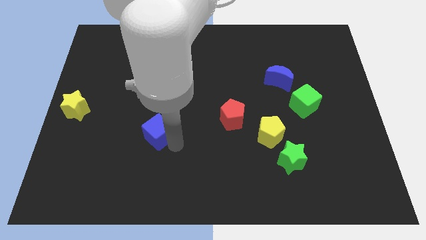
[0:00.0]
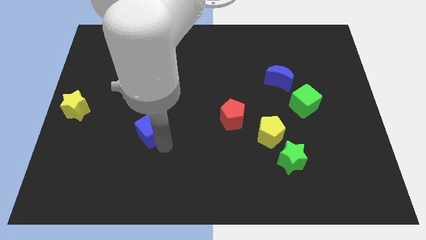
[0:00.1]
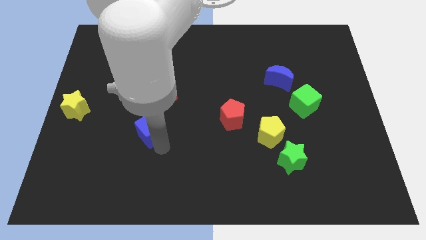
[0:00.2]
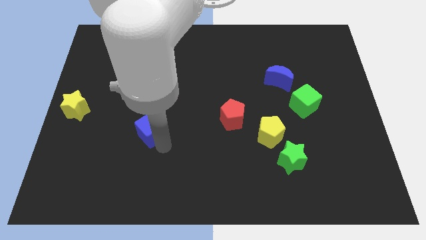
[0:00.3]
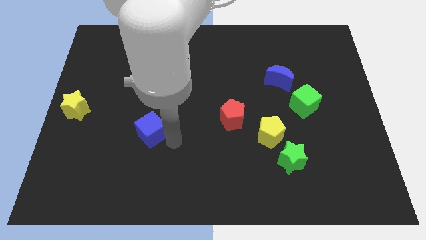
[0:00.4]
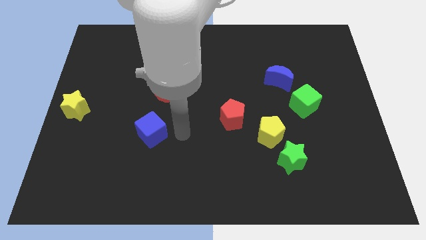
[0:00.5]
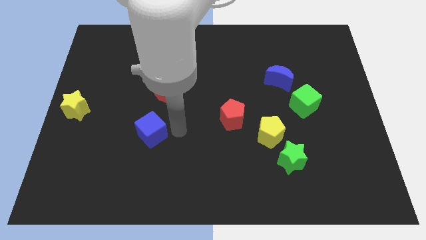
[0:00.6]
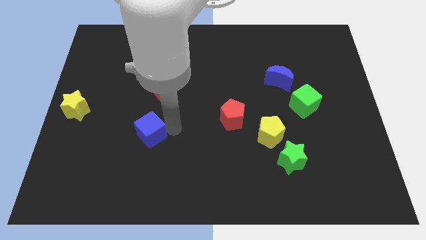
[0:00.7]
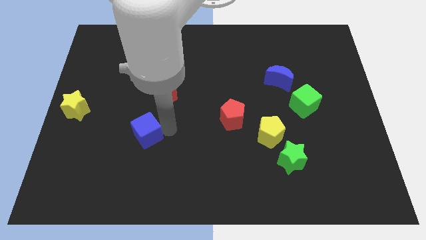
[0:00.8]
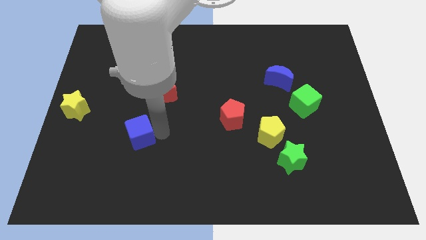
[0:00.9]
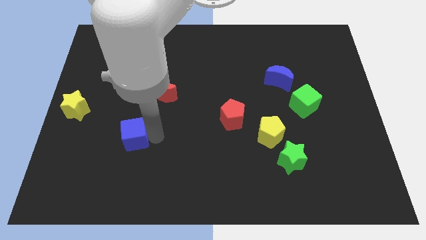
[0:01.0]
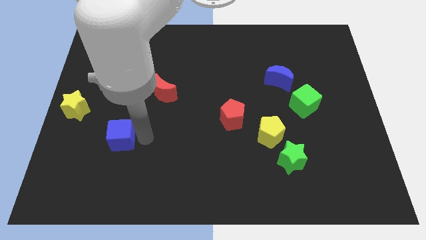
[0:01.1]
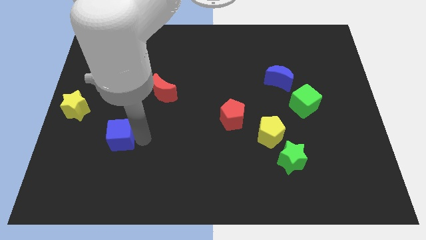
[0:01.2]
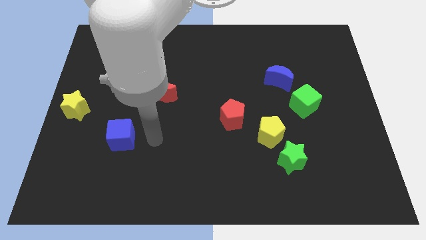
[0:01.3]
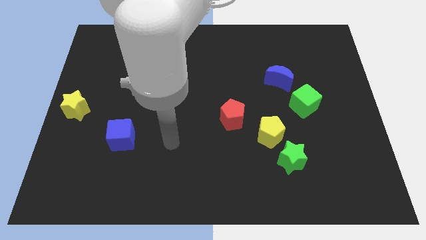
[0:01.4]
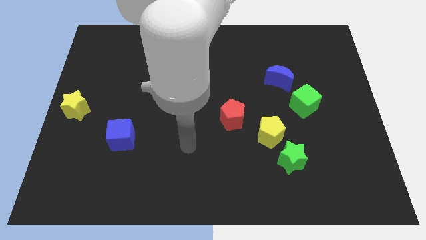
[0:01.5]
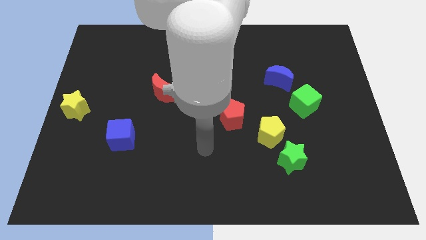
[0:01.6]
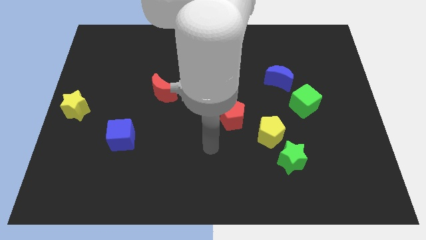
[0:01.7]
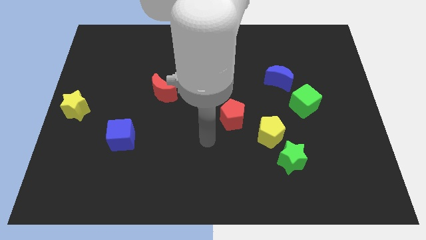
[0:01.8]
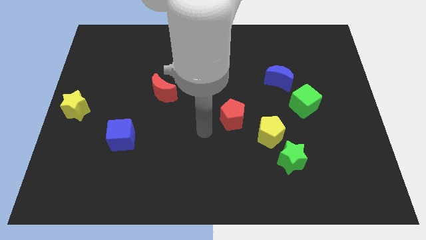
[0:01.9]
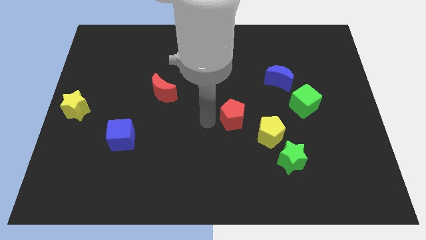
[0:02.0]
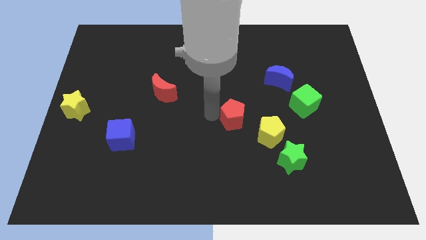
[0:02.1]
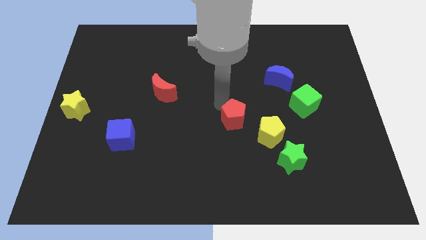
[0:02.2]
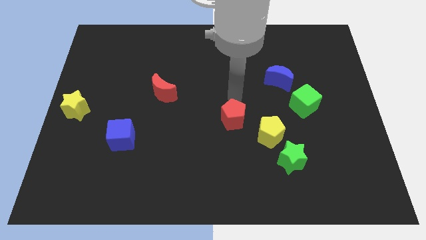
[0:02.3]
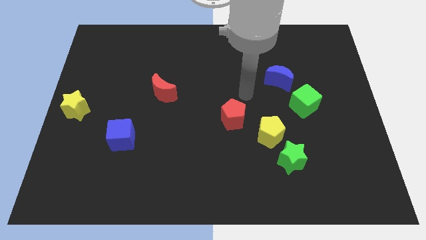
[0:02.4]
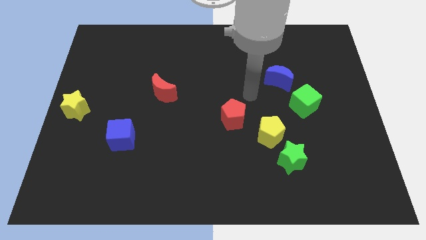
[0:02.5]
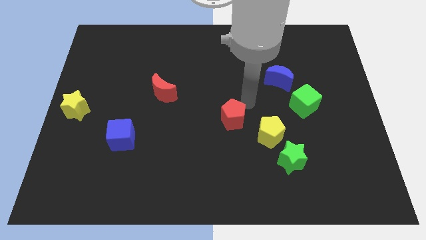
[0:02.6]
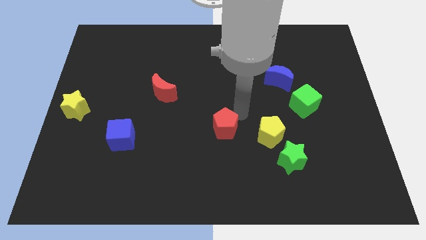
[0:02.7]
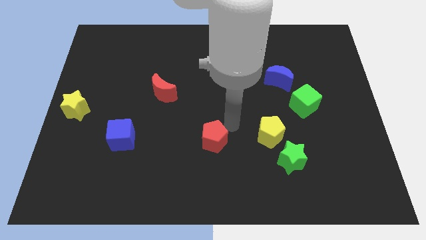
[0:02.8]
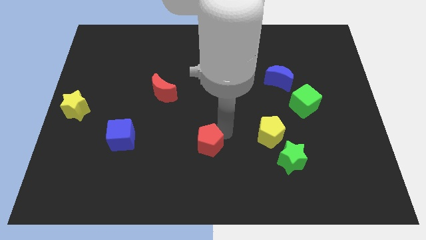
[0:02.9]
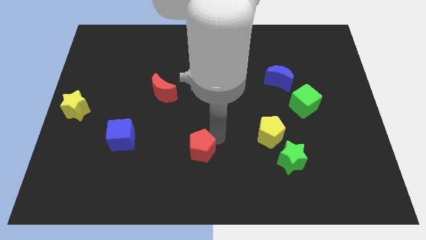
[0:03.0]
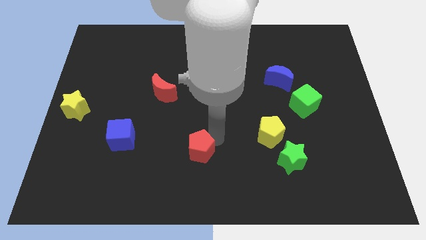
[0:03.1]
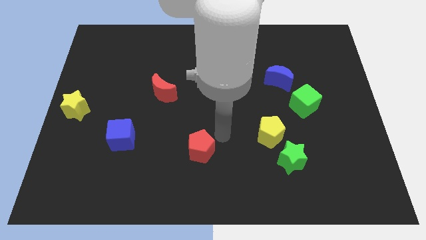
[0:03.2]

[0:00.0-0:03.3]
push red pentagon slightly towards down

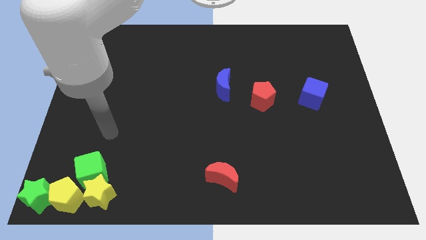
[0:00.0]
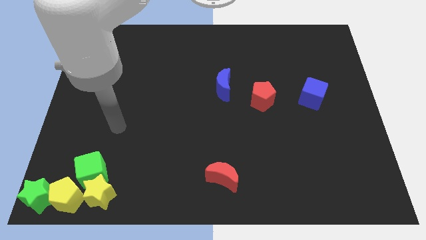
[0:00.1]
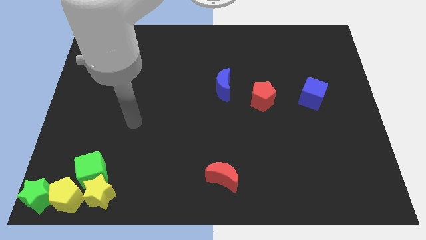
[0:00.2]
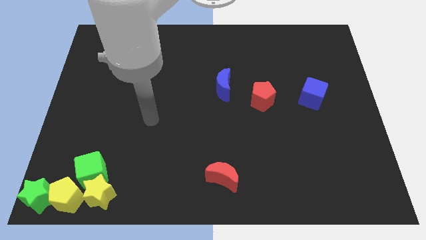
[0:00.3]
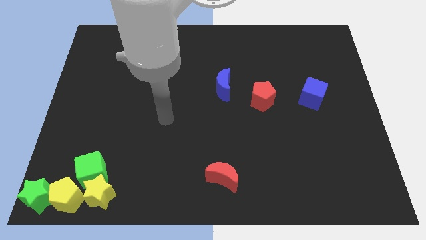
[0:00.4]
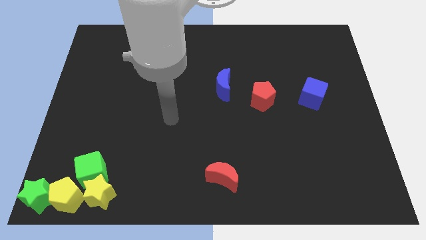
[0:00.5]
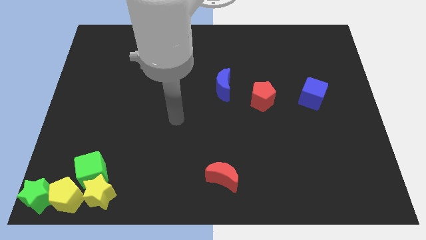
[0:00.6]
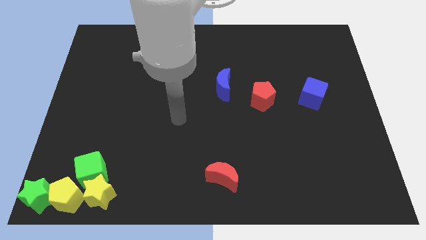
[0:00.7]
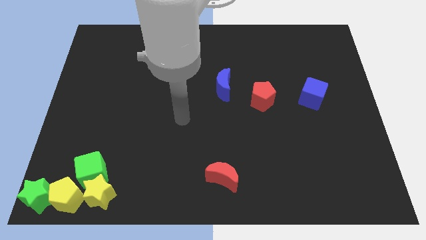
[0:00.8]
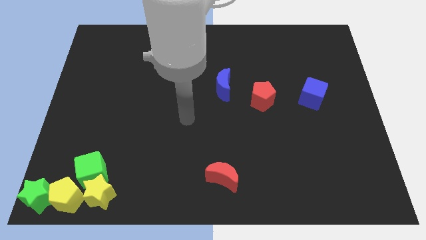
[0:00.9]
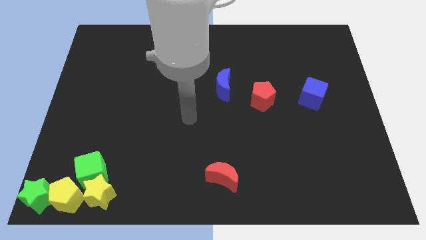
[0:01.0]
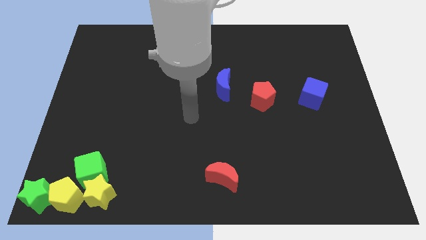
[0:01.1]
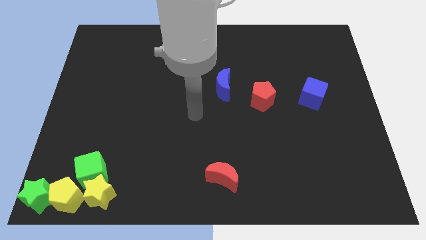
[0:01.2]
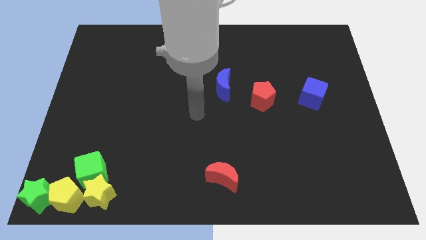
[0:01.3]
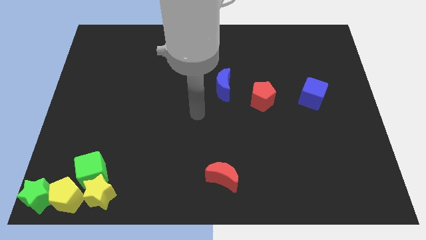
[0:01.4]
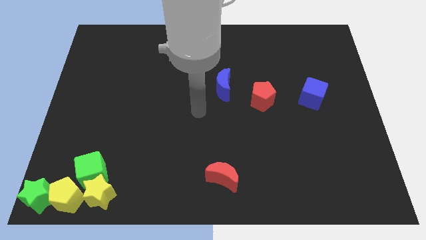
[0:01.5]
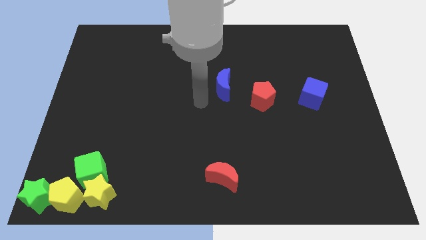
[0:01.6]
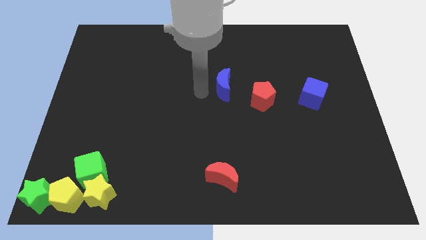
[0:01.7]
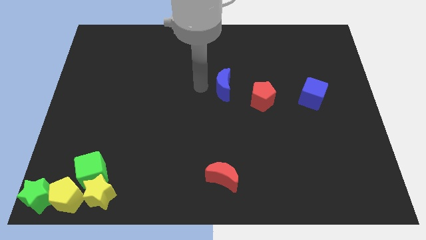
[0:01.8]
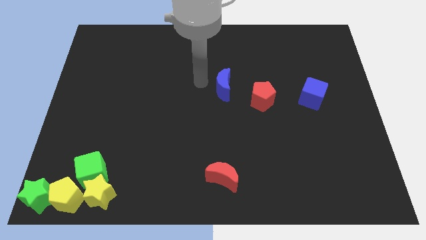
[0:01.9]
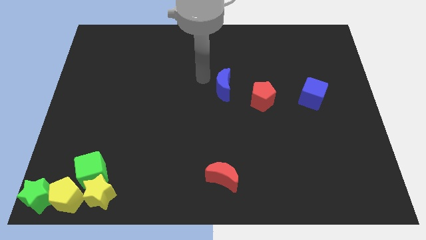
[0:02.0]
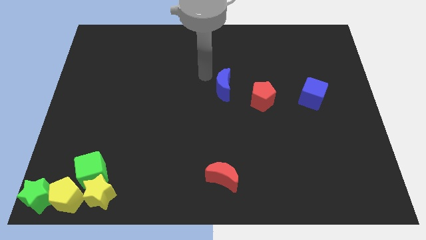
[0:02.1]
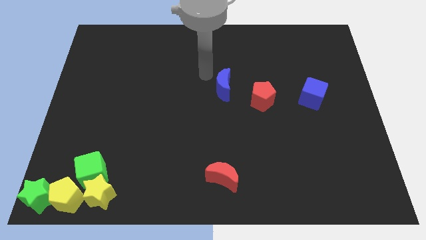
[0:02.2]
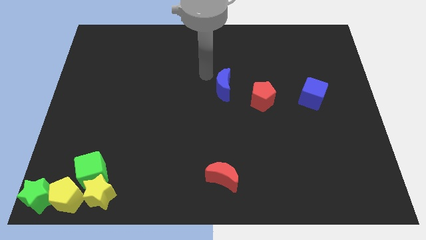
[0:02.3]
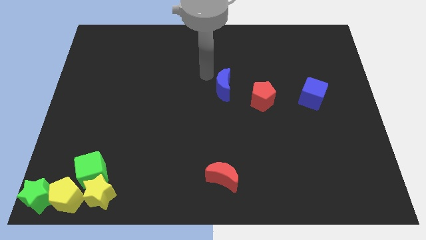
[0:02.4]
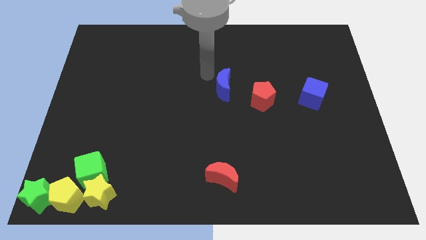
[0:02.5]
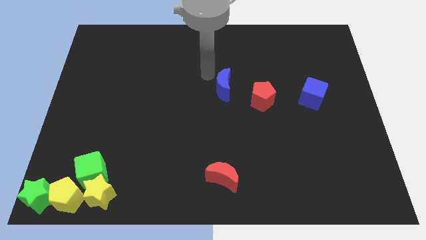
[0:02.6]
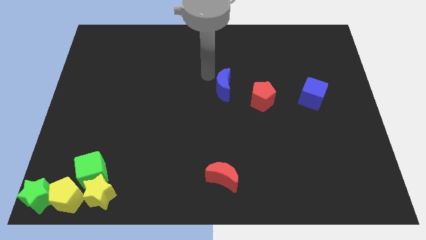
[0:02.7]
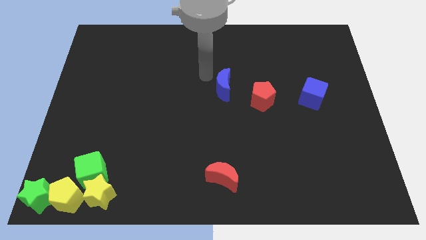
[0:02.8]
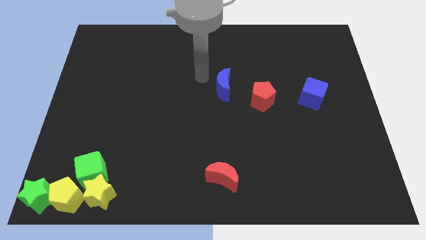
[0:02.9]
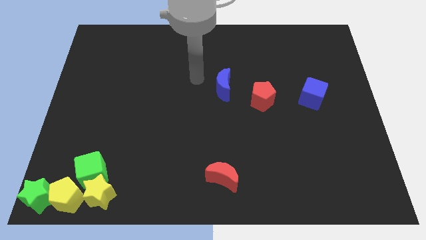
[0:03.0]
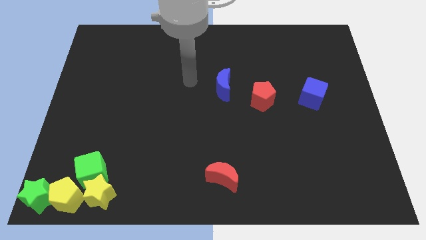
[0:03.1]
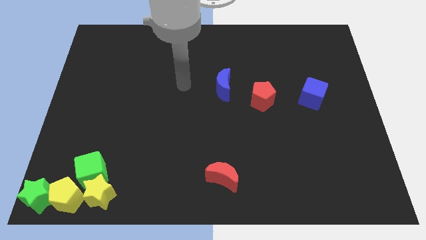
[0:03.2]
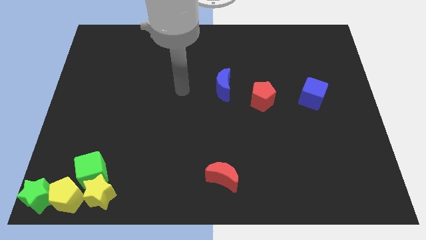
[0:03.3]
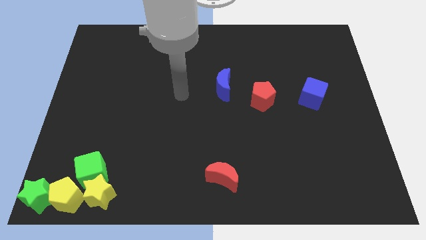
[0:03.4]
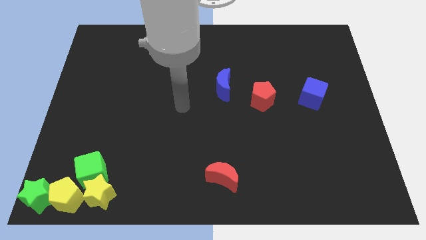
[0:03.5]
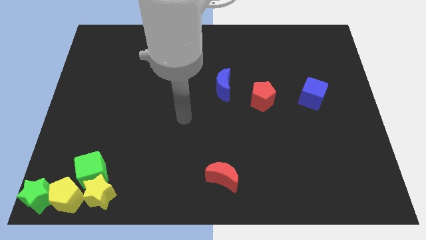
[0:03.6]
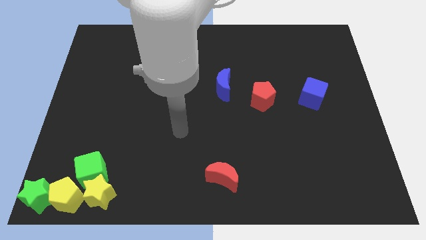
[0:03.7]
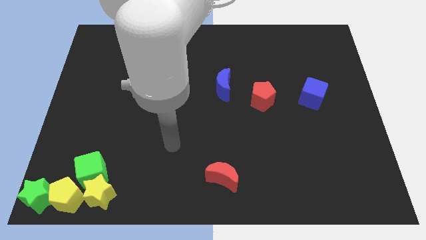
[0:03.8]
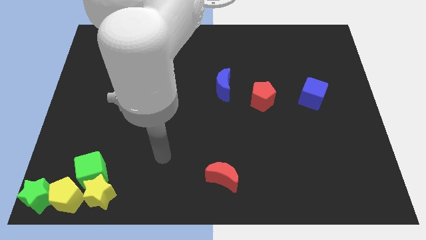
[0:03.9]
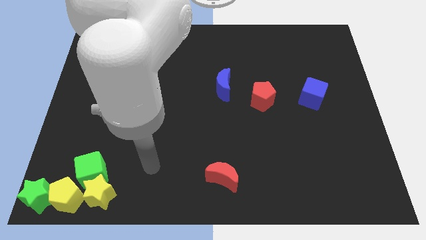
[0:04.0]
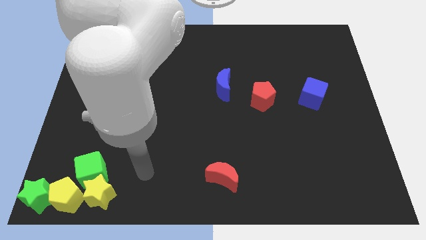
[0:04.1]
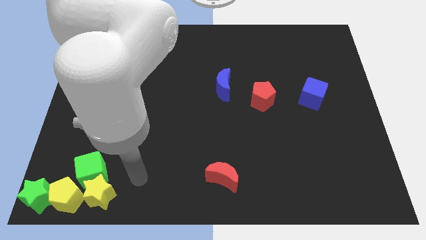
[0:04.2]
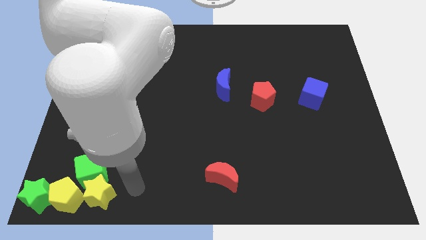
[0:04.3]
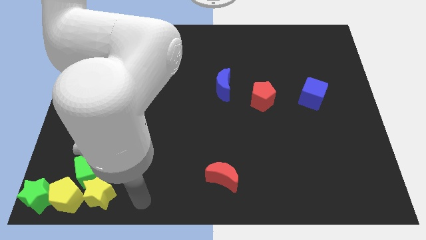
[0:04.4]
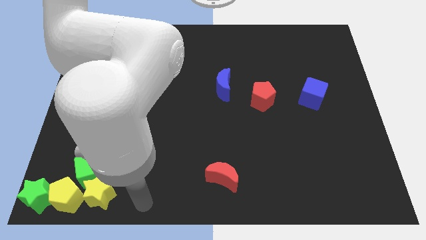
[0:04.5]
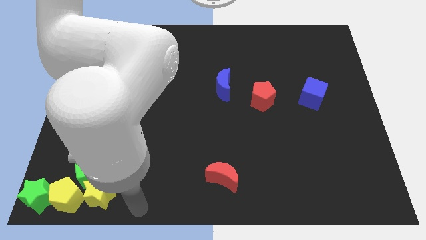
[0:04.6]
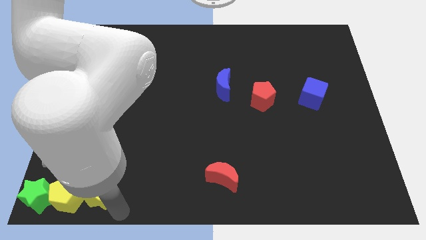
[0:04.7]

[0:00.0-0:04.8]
move your arm to the bottom of the yellow star

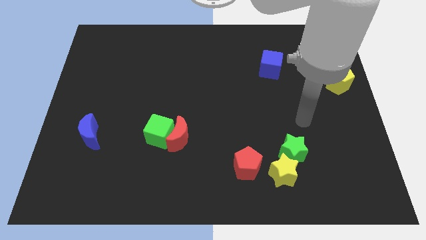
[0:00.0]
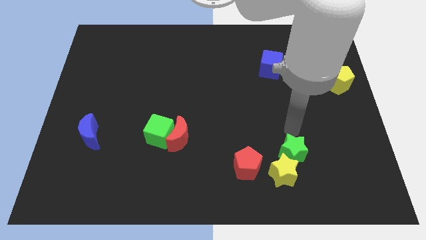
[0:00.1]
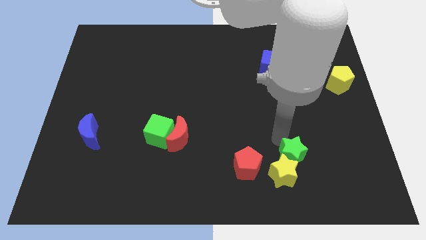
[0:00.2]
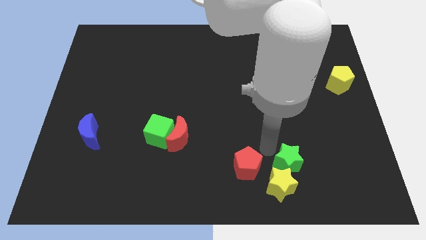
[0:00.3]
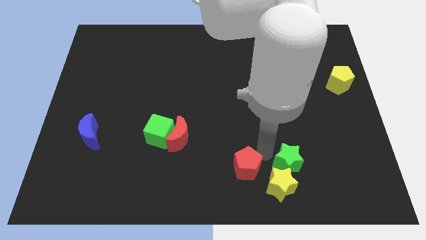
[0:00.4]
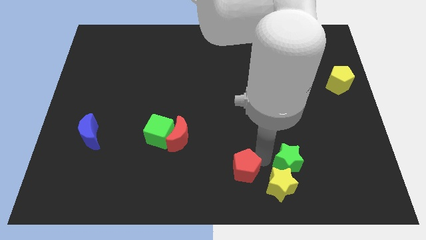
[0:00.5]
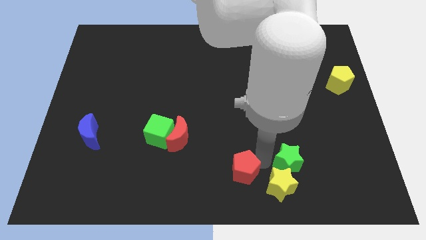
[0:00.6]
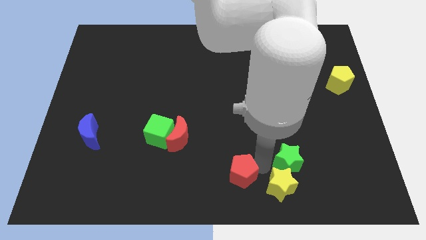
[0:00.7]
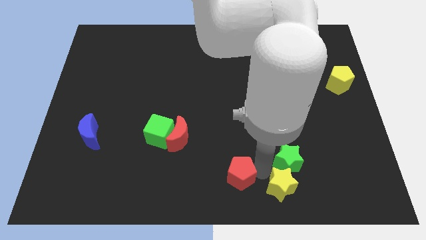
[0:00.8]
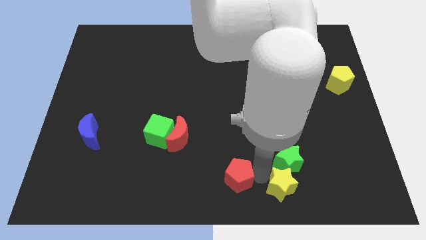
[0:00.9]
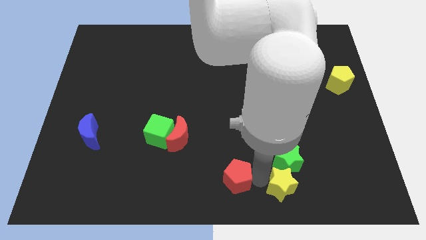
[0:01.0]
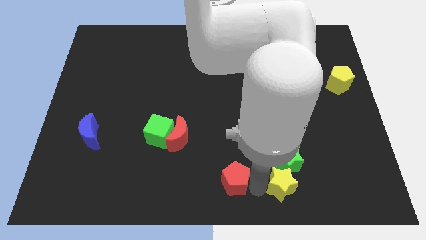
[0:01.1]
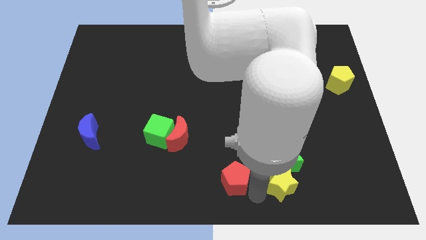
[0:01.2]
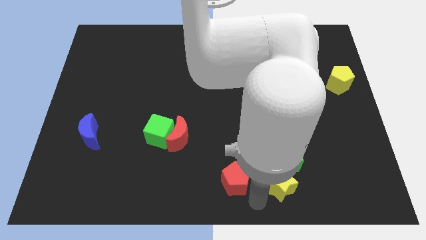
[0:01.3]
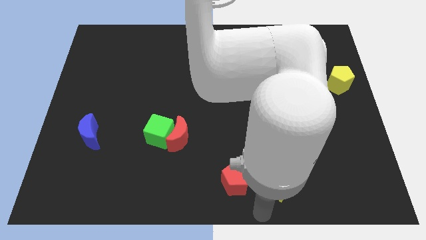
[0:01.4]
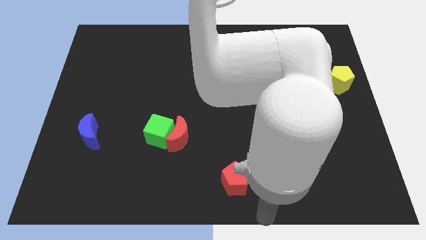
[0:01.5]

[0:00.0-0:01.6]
move the red pentagon to the left side of the yellow star
